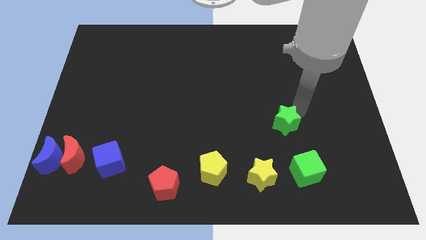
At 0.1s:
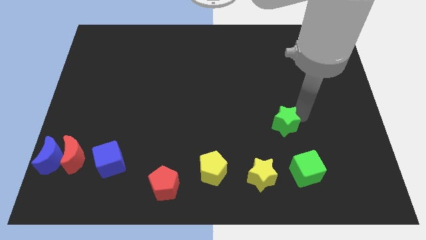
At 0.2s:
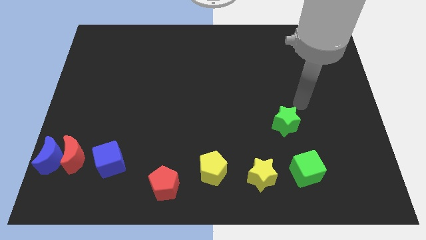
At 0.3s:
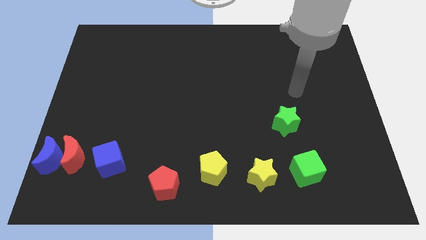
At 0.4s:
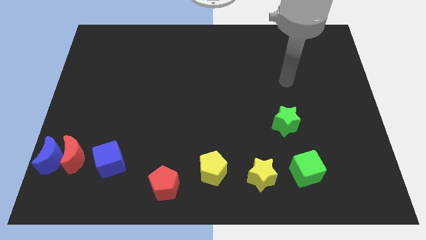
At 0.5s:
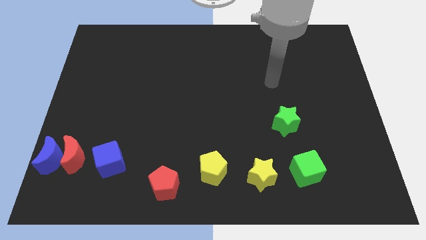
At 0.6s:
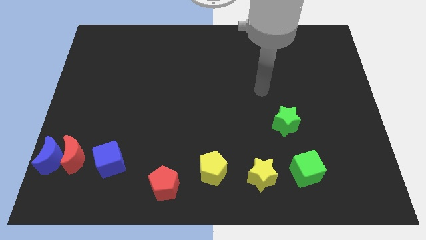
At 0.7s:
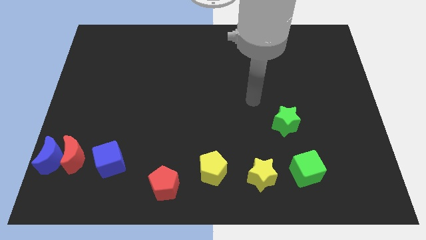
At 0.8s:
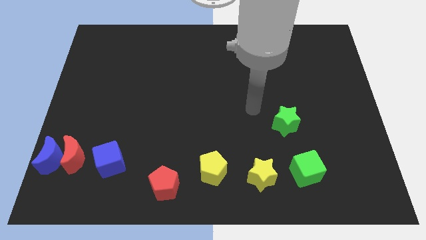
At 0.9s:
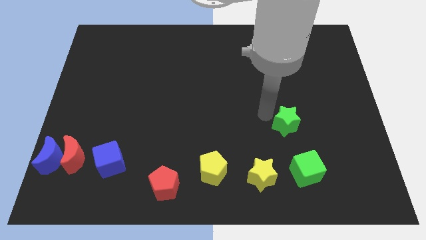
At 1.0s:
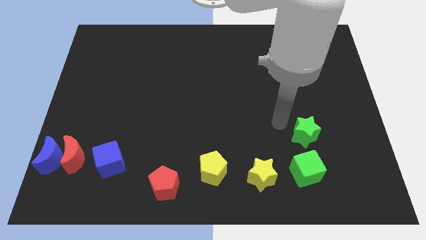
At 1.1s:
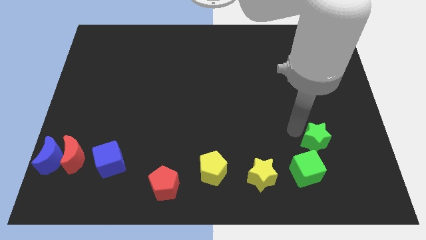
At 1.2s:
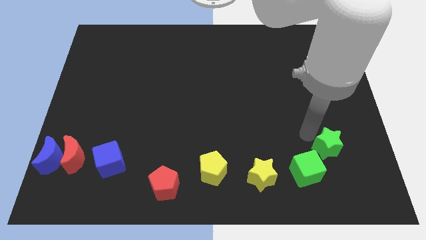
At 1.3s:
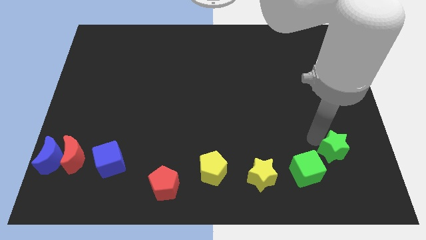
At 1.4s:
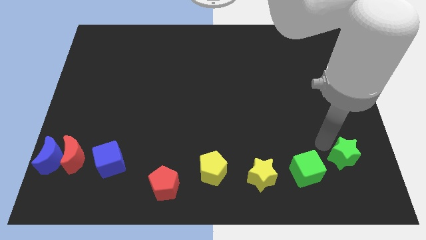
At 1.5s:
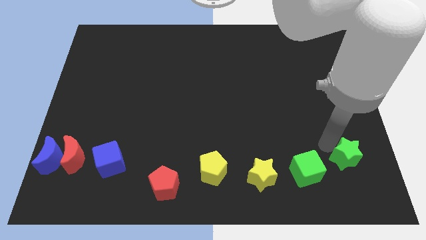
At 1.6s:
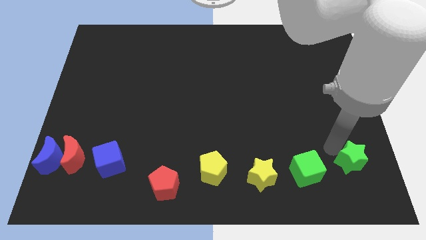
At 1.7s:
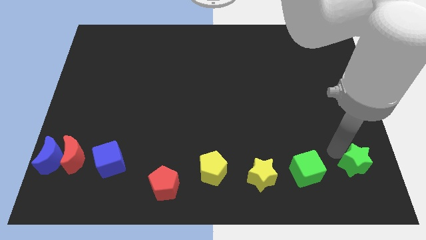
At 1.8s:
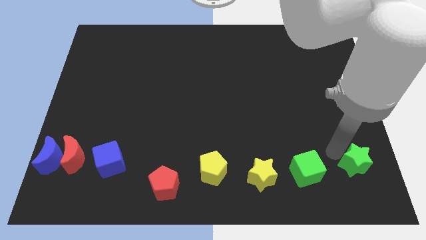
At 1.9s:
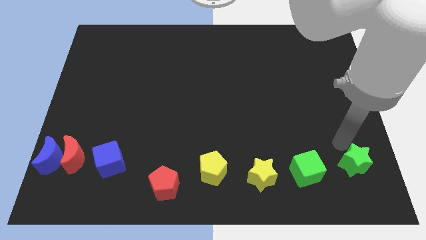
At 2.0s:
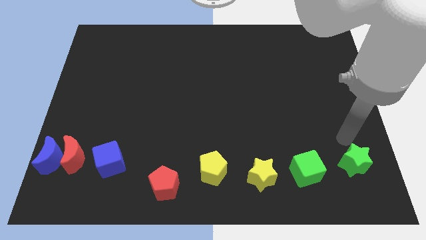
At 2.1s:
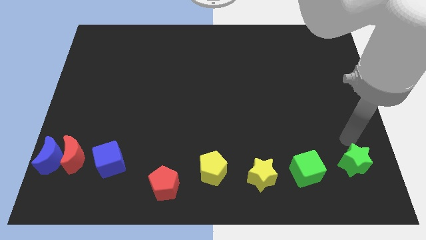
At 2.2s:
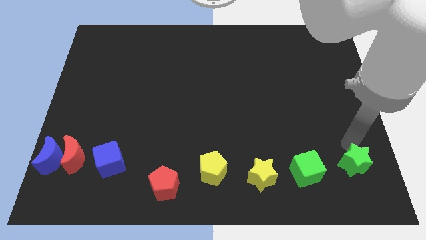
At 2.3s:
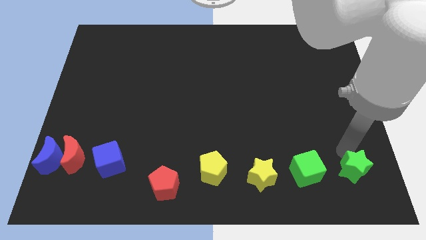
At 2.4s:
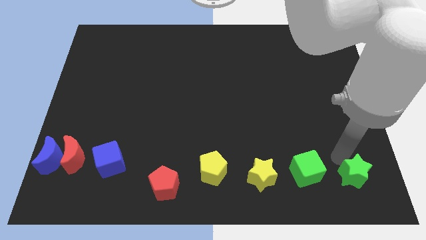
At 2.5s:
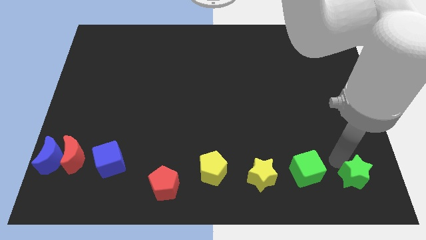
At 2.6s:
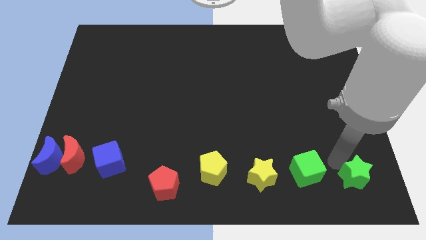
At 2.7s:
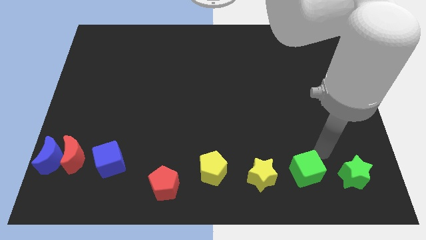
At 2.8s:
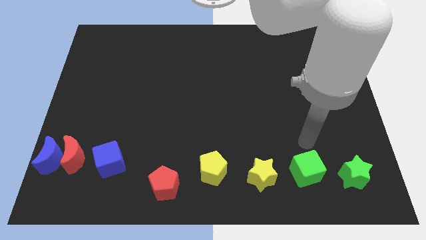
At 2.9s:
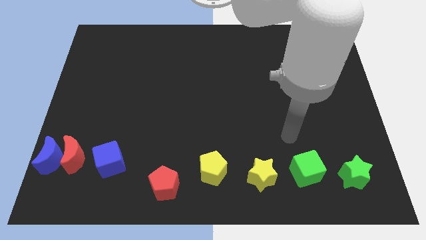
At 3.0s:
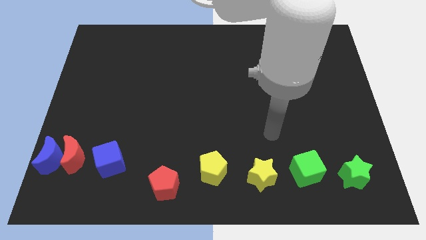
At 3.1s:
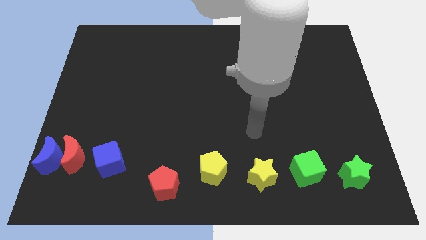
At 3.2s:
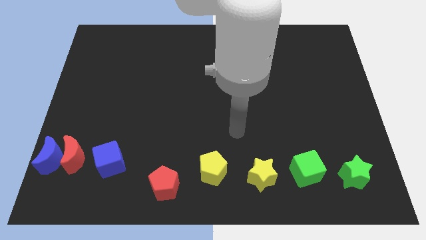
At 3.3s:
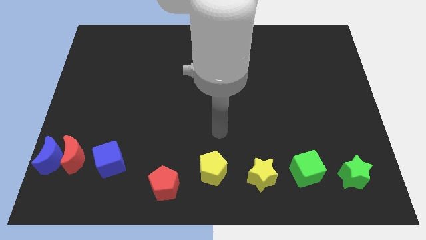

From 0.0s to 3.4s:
put the green star parallel right to the green cube

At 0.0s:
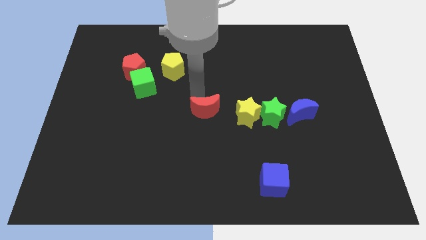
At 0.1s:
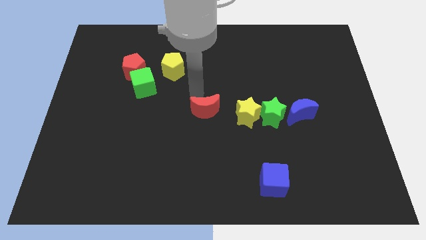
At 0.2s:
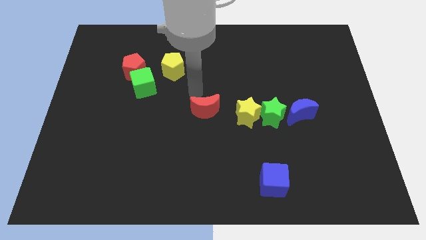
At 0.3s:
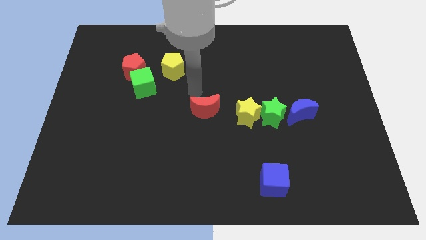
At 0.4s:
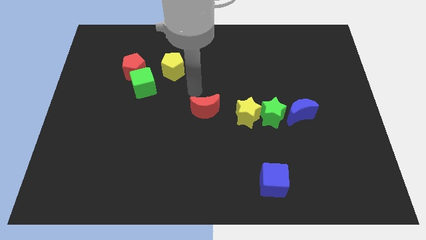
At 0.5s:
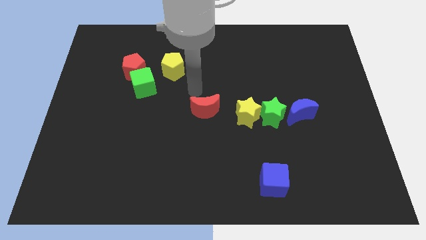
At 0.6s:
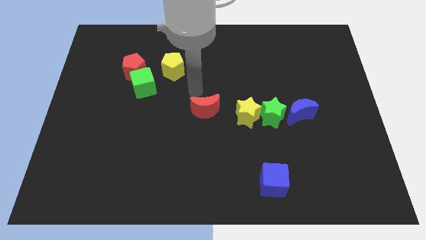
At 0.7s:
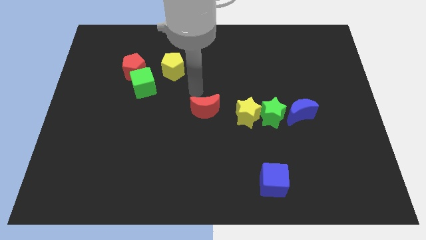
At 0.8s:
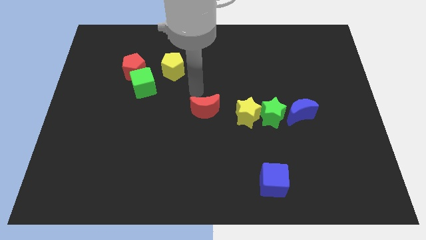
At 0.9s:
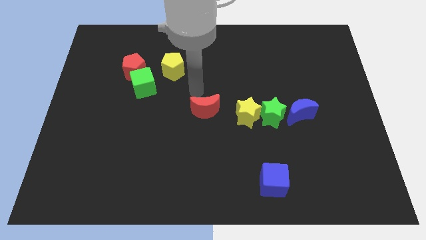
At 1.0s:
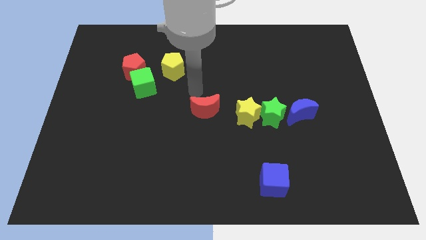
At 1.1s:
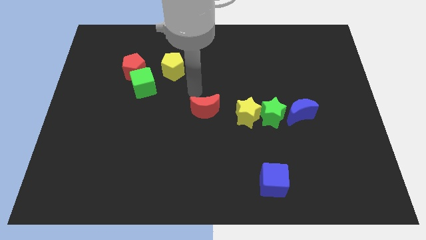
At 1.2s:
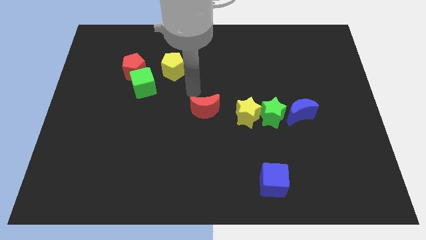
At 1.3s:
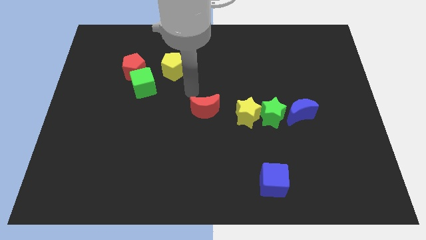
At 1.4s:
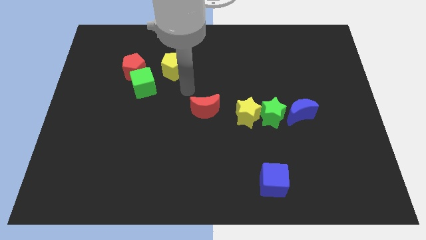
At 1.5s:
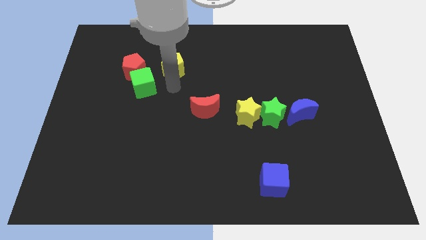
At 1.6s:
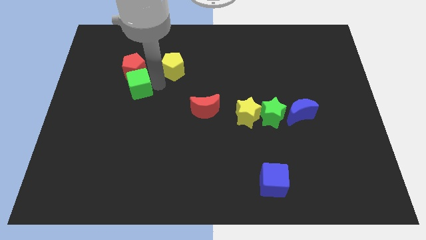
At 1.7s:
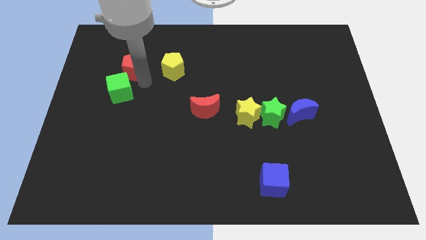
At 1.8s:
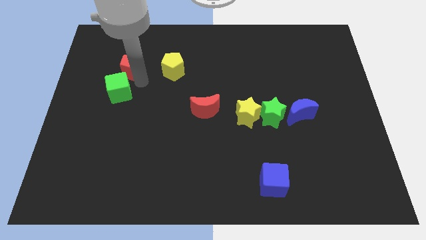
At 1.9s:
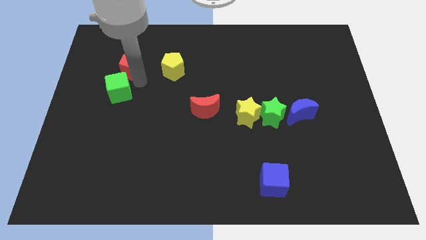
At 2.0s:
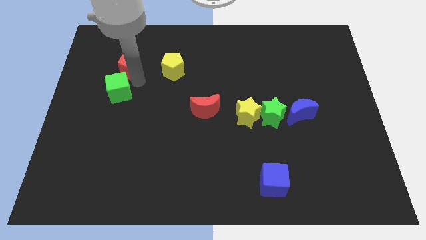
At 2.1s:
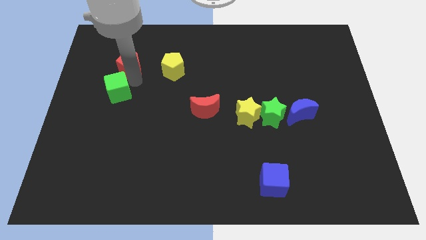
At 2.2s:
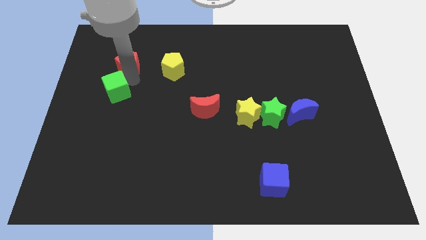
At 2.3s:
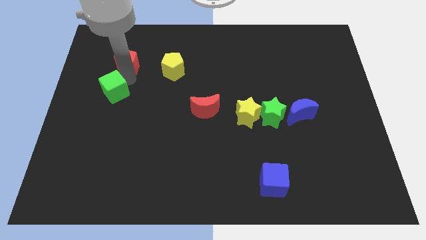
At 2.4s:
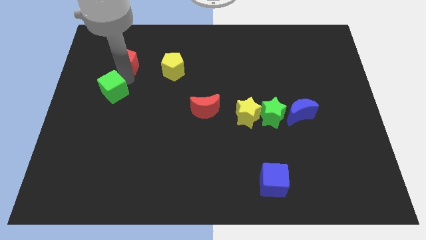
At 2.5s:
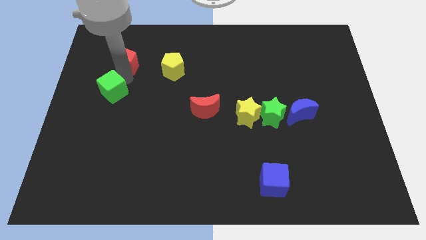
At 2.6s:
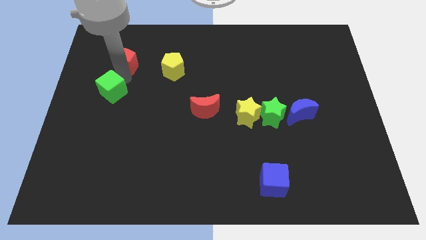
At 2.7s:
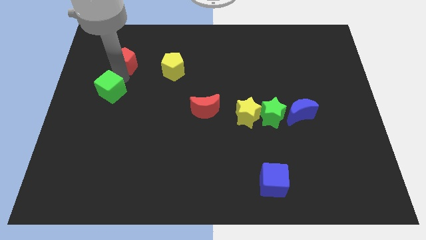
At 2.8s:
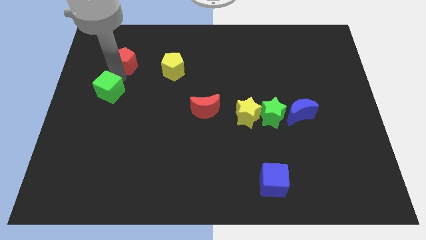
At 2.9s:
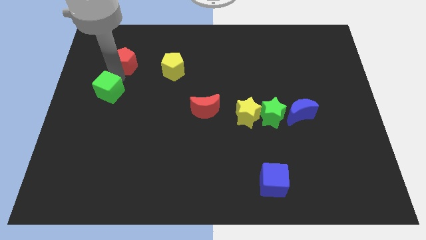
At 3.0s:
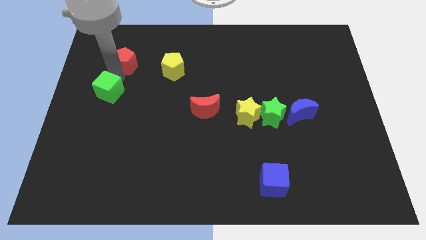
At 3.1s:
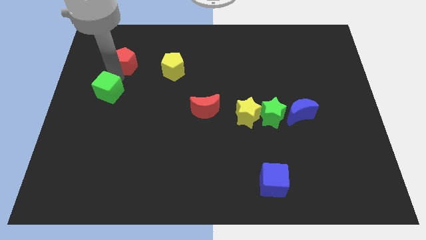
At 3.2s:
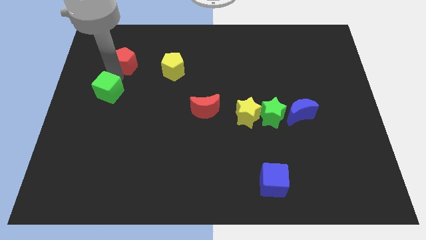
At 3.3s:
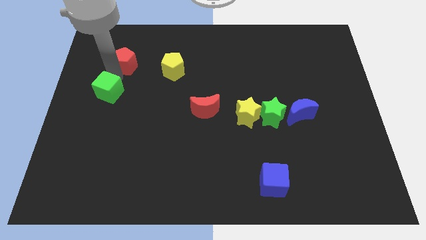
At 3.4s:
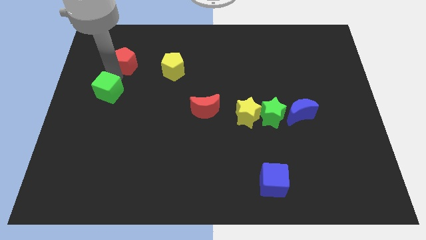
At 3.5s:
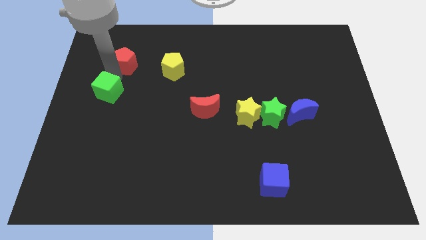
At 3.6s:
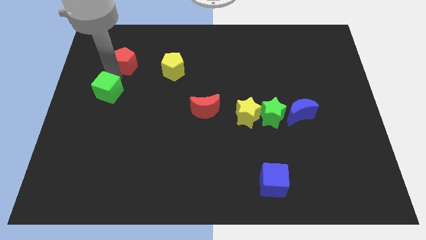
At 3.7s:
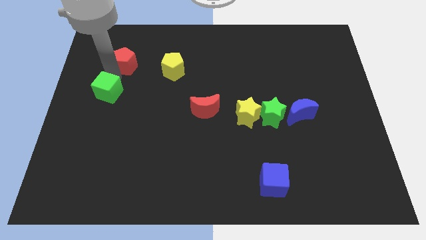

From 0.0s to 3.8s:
place your arm in between red pentagon and green cube

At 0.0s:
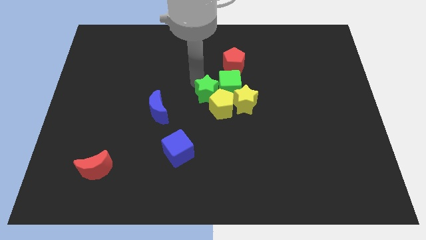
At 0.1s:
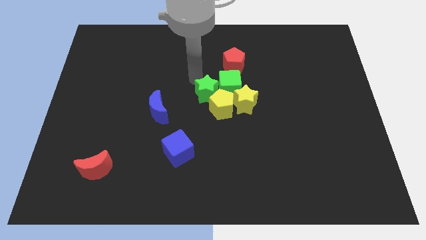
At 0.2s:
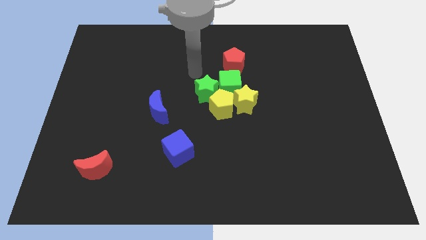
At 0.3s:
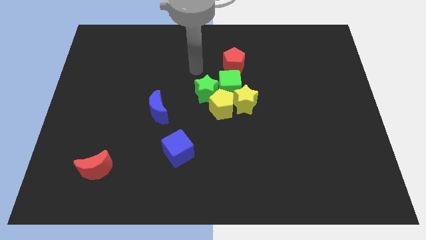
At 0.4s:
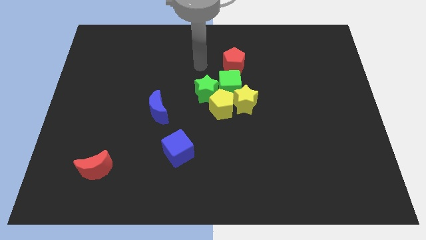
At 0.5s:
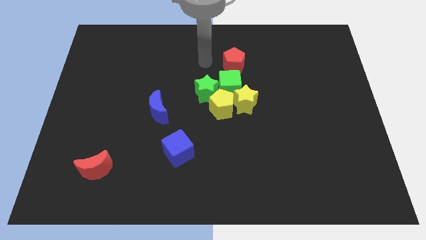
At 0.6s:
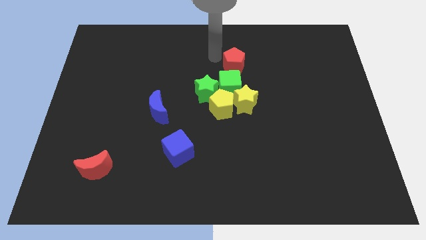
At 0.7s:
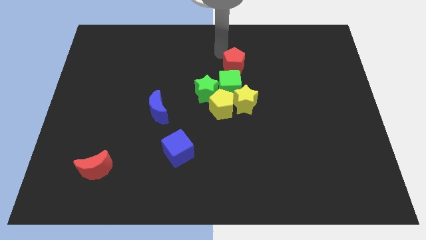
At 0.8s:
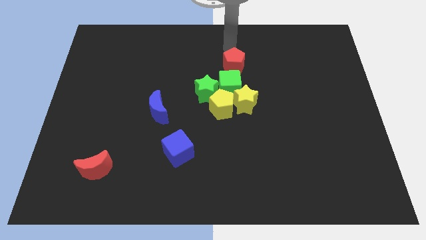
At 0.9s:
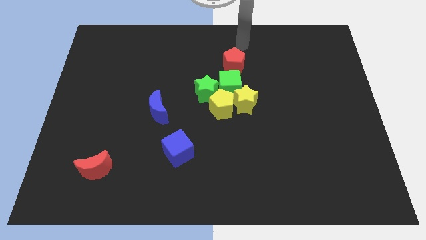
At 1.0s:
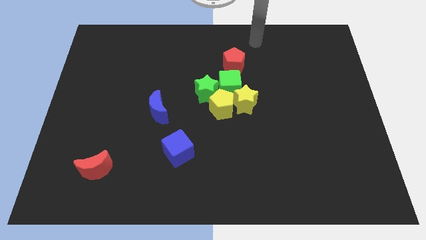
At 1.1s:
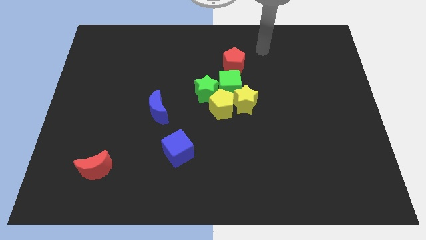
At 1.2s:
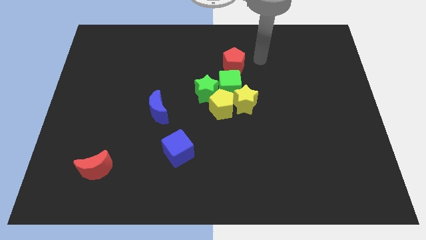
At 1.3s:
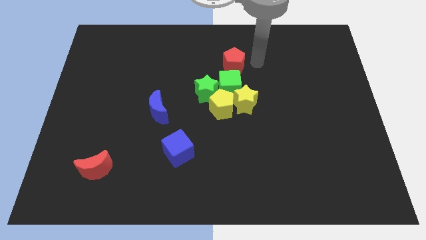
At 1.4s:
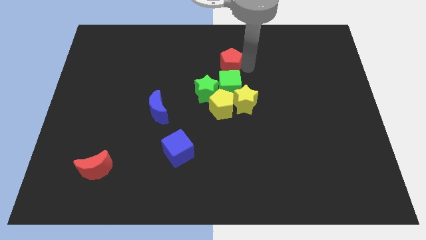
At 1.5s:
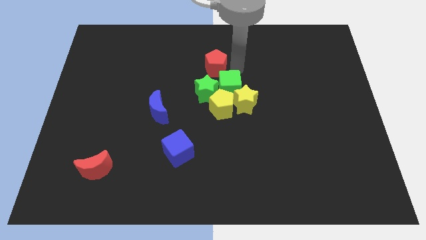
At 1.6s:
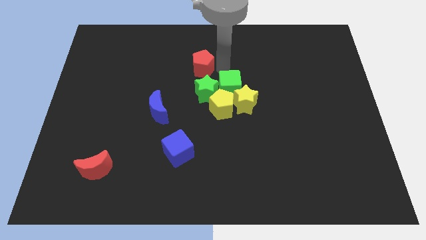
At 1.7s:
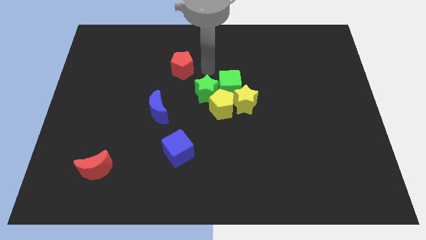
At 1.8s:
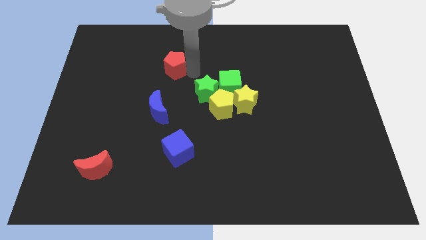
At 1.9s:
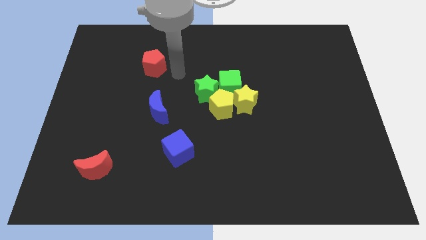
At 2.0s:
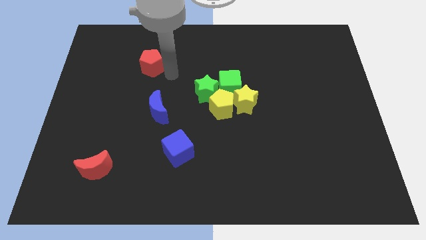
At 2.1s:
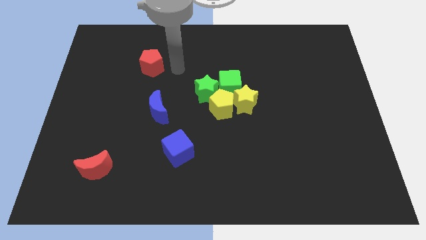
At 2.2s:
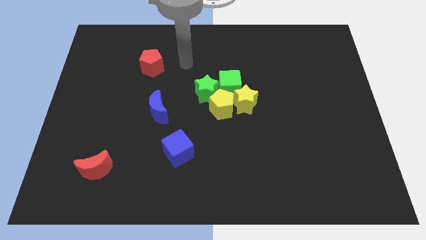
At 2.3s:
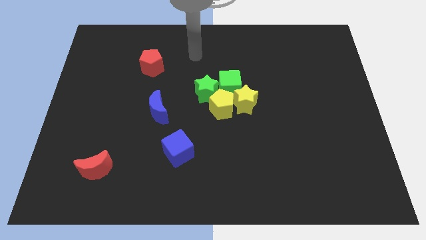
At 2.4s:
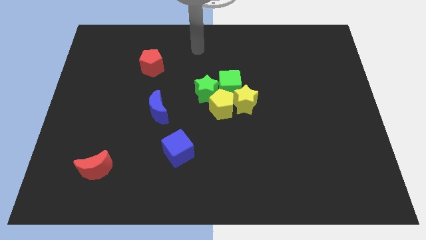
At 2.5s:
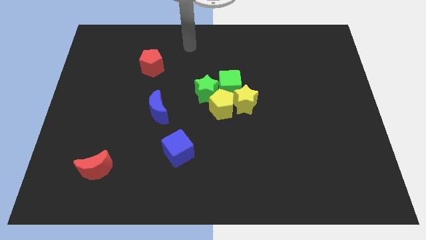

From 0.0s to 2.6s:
move the red pentagon towards the left side of the board
